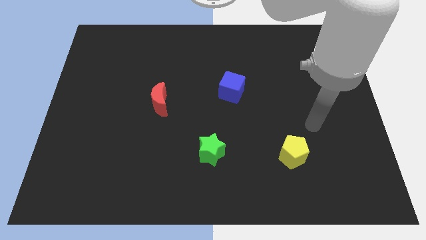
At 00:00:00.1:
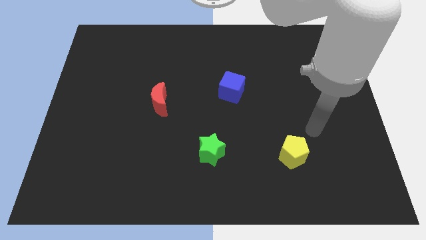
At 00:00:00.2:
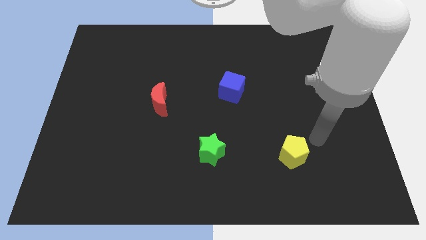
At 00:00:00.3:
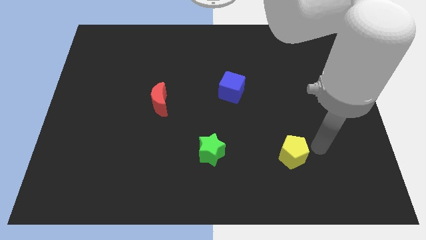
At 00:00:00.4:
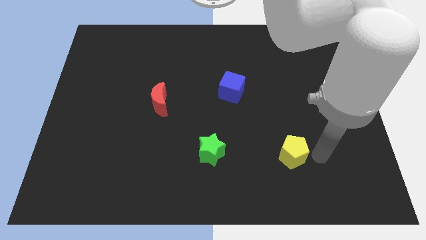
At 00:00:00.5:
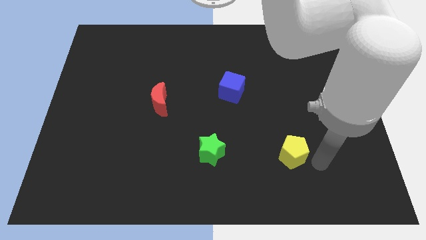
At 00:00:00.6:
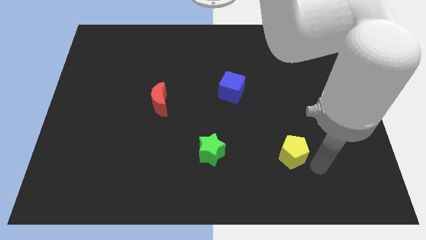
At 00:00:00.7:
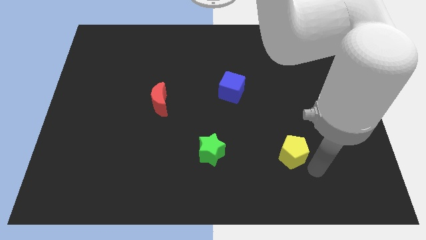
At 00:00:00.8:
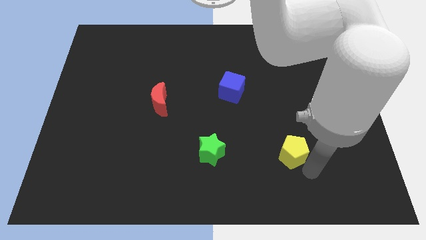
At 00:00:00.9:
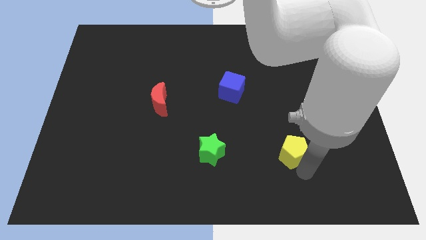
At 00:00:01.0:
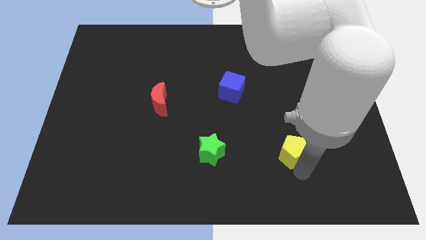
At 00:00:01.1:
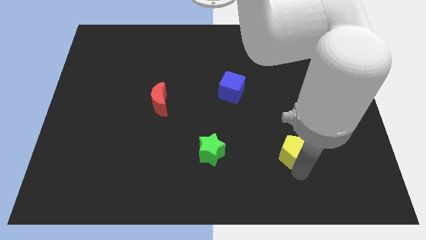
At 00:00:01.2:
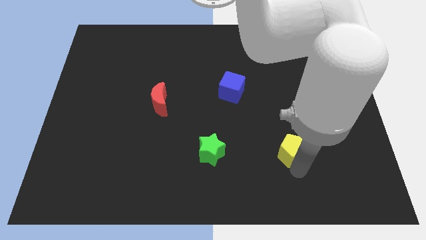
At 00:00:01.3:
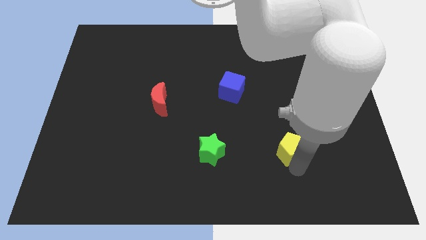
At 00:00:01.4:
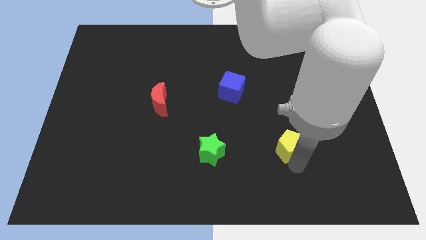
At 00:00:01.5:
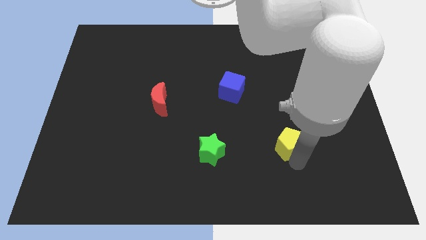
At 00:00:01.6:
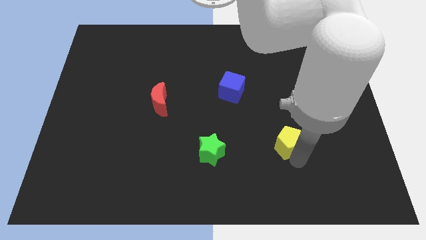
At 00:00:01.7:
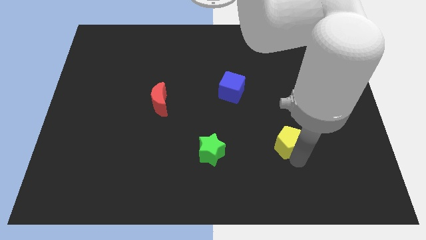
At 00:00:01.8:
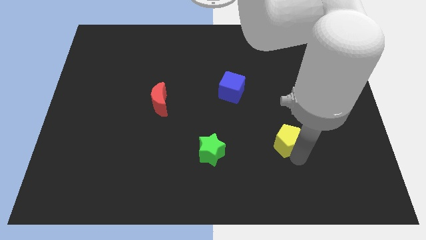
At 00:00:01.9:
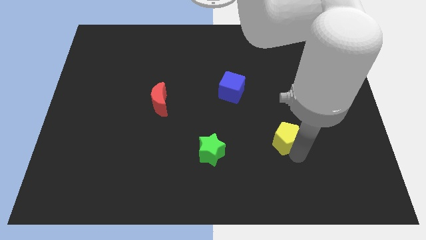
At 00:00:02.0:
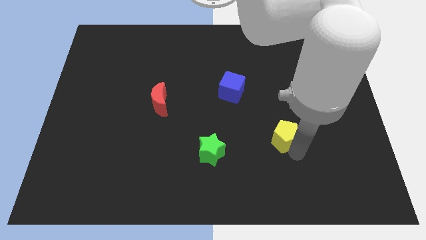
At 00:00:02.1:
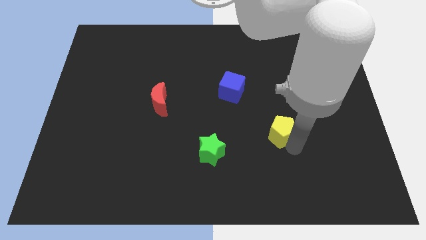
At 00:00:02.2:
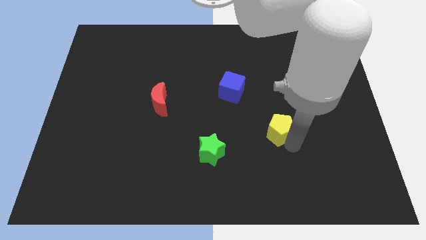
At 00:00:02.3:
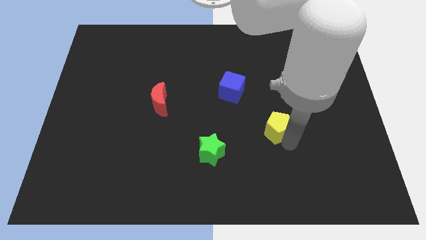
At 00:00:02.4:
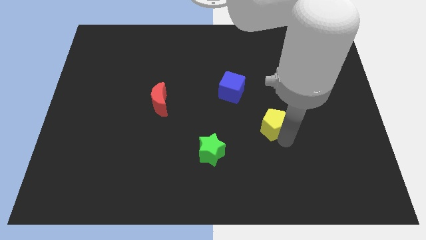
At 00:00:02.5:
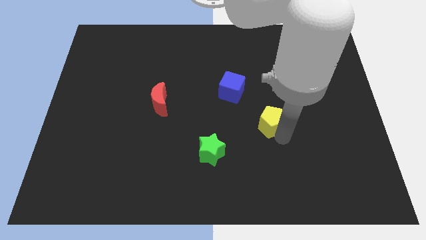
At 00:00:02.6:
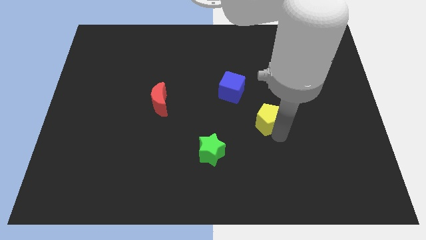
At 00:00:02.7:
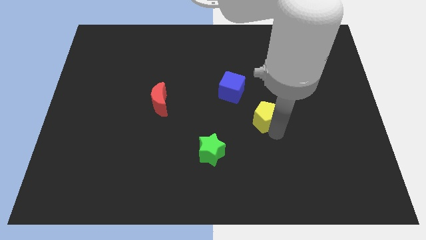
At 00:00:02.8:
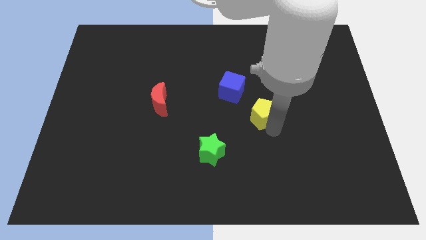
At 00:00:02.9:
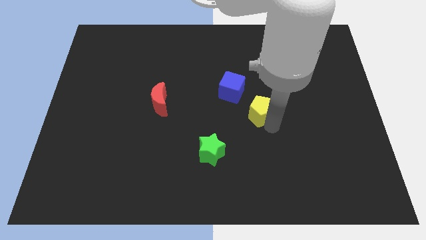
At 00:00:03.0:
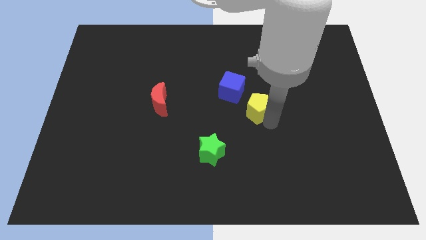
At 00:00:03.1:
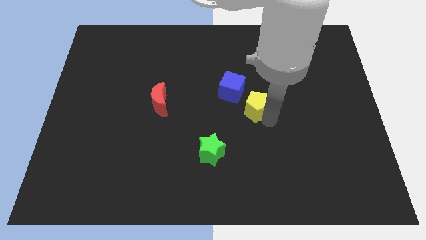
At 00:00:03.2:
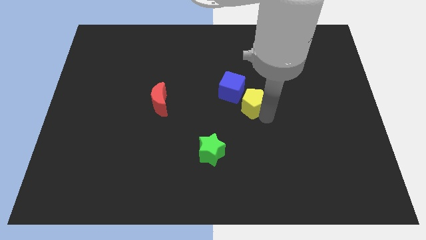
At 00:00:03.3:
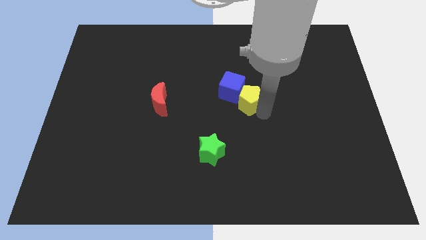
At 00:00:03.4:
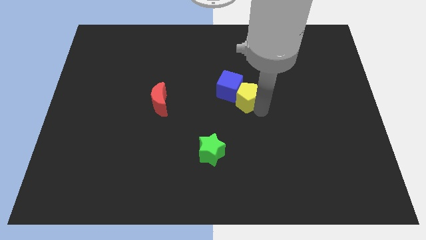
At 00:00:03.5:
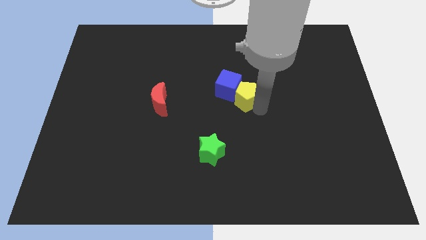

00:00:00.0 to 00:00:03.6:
move the yellow block next to the blue block

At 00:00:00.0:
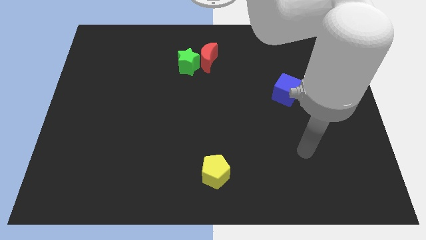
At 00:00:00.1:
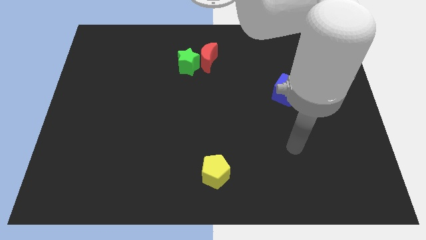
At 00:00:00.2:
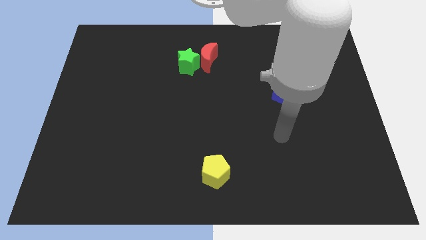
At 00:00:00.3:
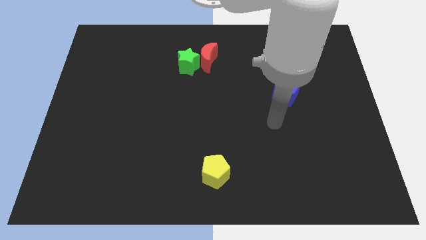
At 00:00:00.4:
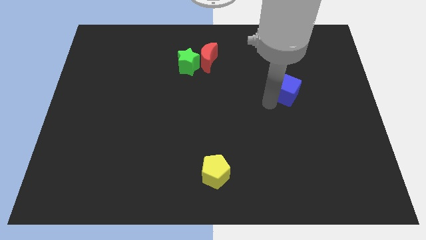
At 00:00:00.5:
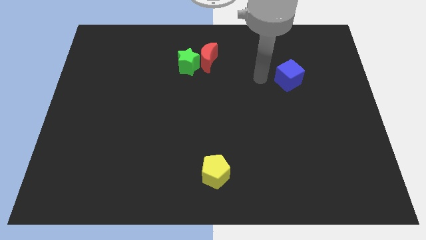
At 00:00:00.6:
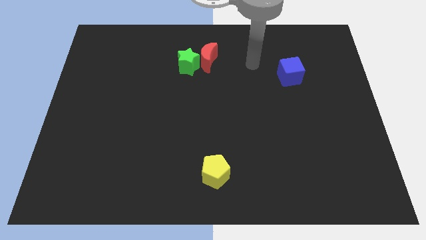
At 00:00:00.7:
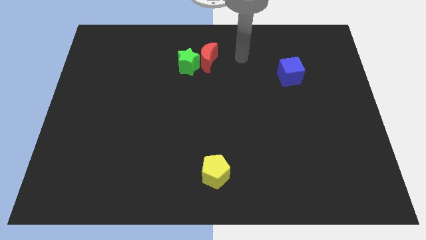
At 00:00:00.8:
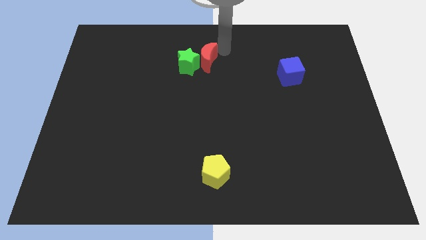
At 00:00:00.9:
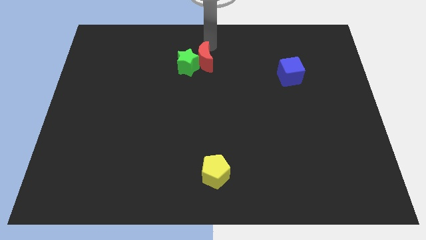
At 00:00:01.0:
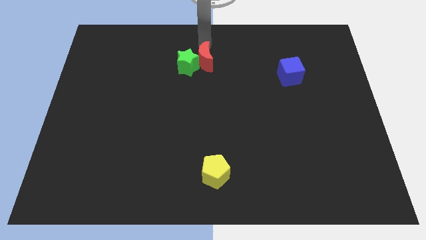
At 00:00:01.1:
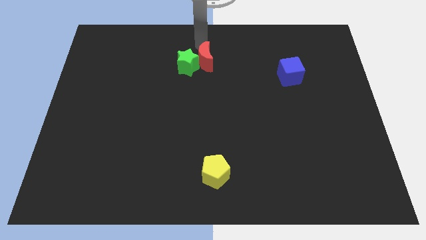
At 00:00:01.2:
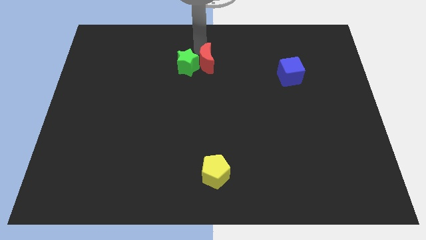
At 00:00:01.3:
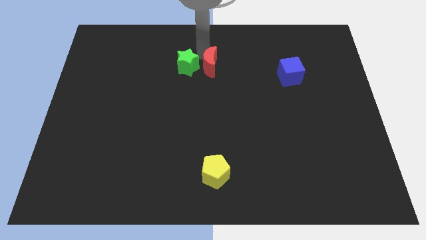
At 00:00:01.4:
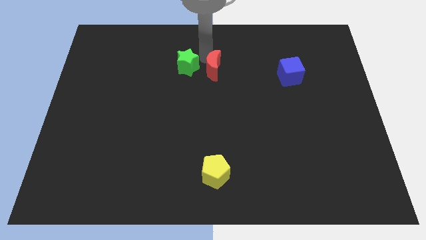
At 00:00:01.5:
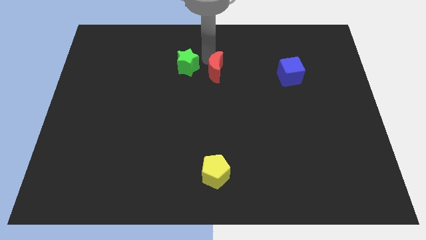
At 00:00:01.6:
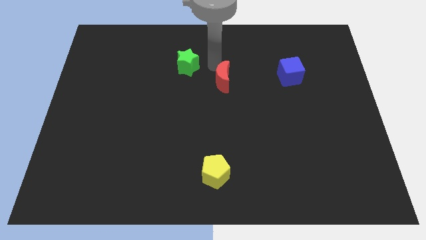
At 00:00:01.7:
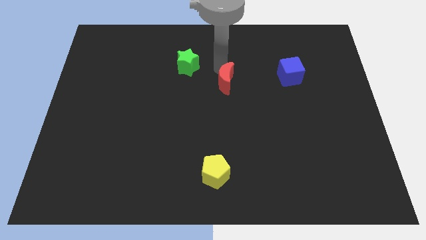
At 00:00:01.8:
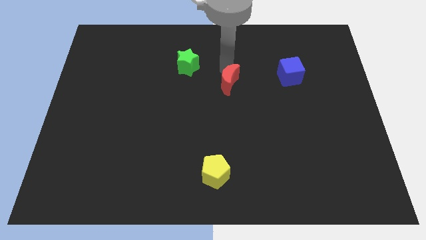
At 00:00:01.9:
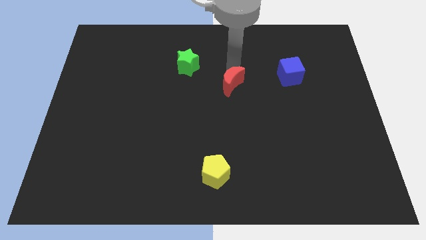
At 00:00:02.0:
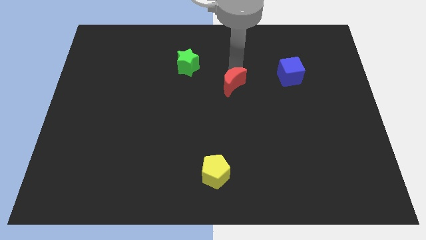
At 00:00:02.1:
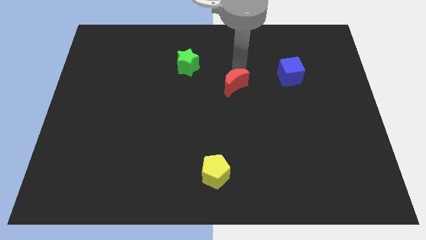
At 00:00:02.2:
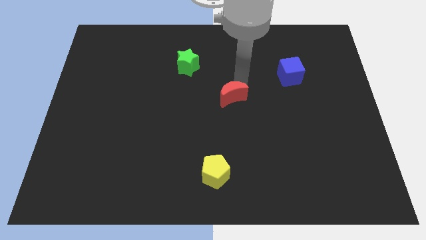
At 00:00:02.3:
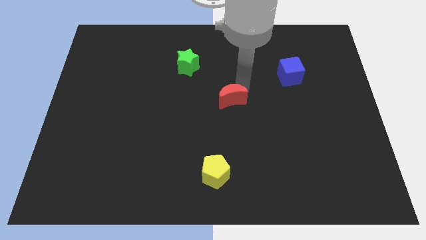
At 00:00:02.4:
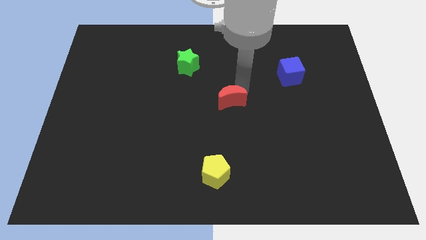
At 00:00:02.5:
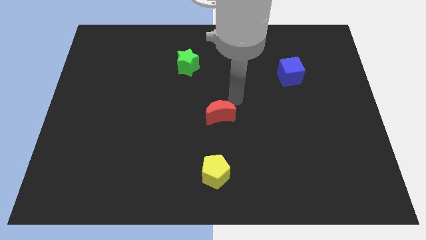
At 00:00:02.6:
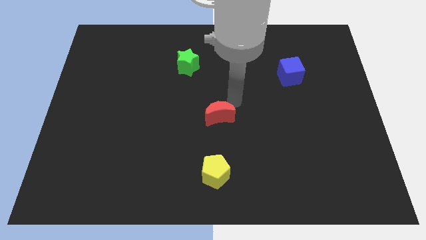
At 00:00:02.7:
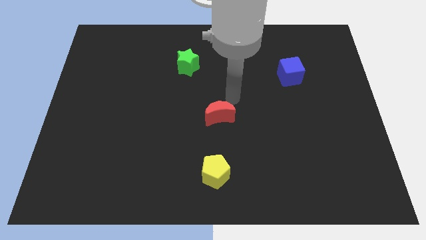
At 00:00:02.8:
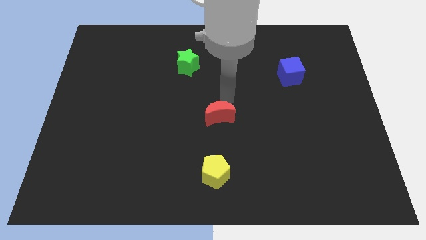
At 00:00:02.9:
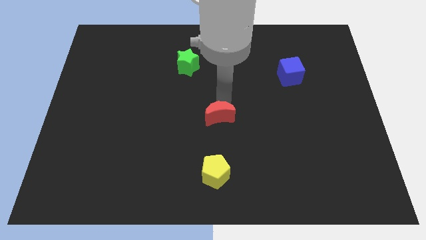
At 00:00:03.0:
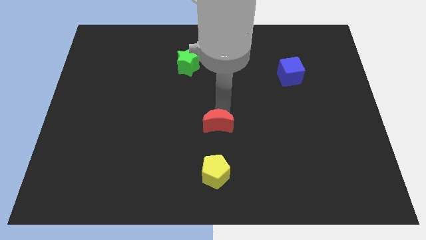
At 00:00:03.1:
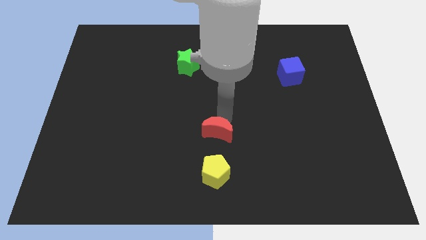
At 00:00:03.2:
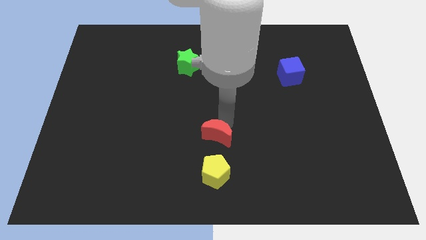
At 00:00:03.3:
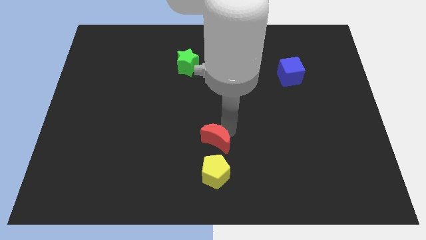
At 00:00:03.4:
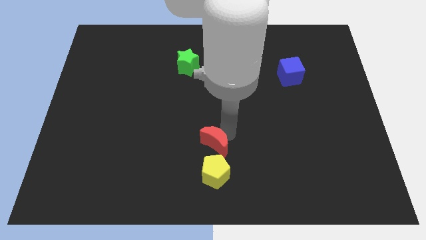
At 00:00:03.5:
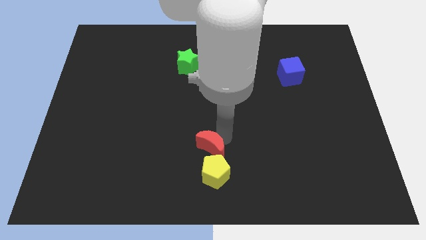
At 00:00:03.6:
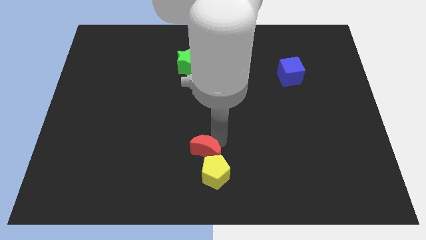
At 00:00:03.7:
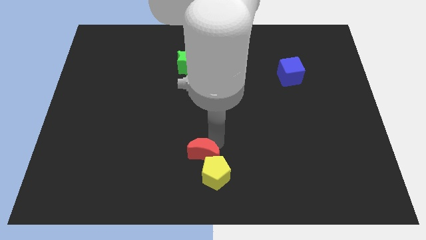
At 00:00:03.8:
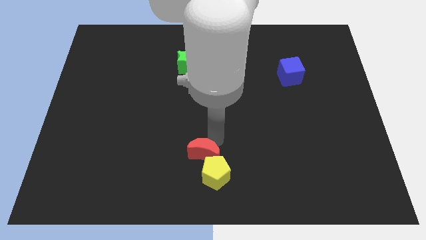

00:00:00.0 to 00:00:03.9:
push the moon to the yellow pentagon

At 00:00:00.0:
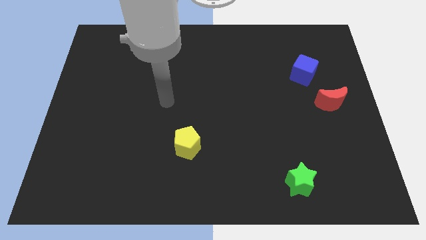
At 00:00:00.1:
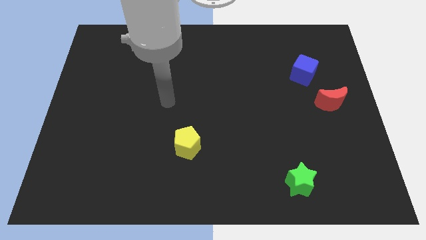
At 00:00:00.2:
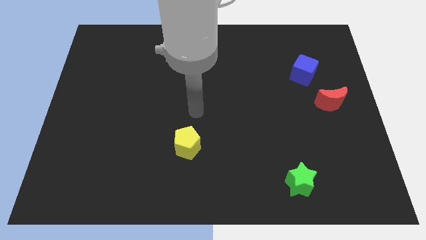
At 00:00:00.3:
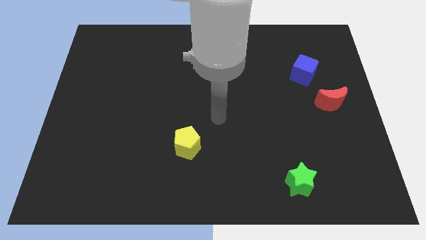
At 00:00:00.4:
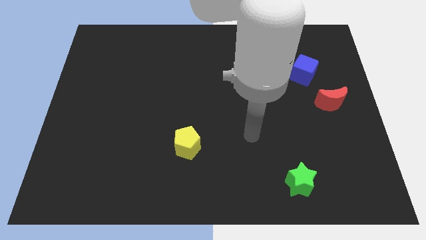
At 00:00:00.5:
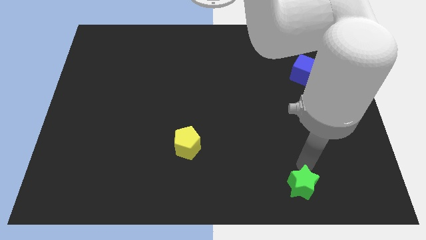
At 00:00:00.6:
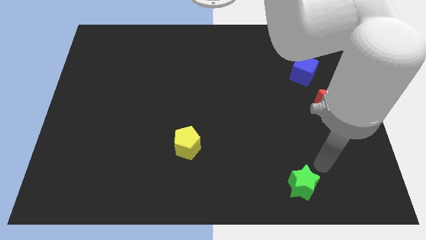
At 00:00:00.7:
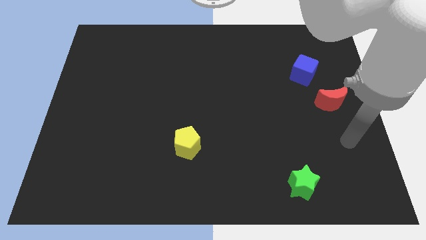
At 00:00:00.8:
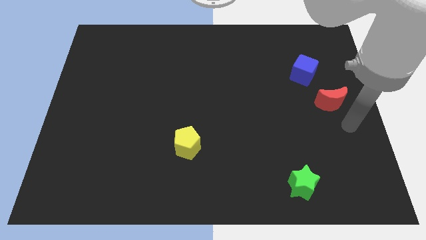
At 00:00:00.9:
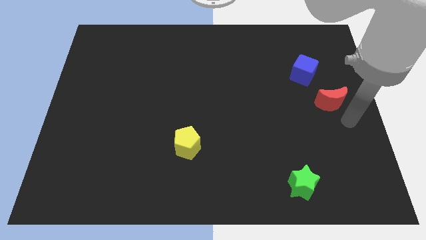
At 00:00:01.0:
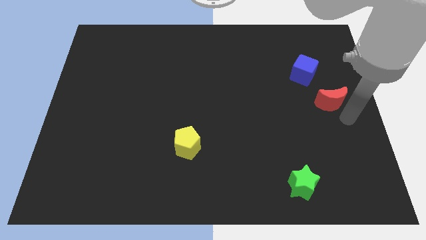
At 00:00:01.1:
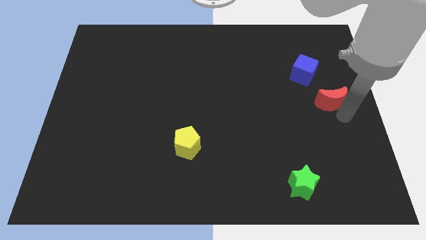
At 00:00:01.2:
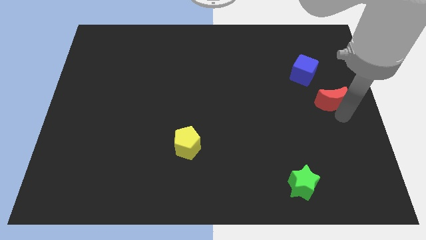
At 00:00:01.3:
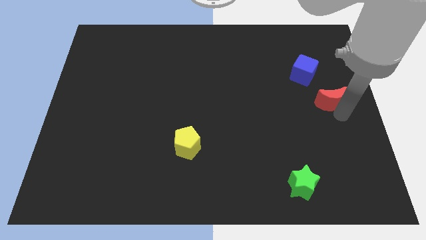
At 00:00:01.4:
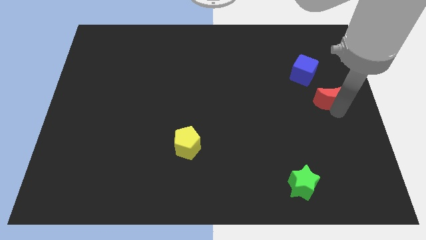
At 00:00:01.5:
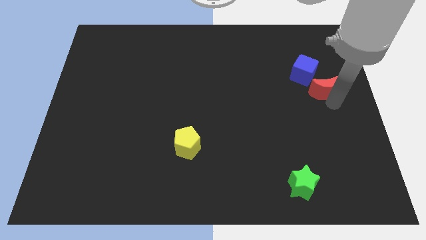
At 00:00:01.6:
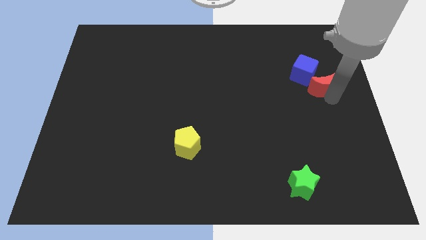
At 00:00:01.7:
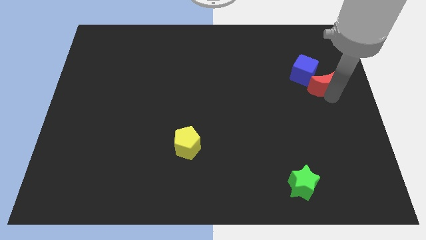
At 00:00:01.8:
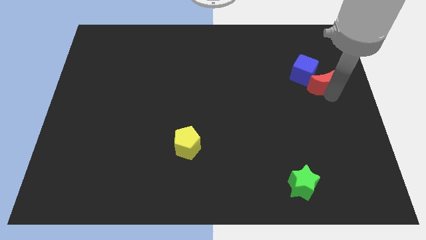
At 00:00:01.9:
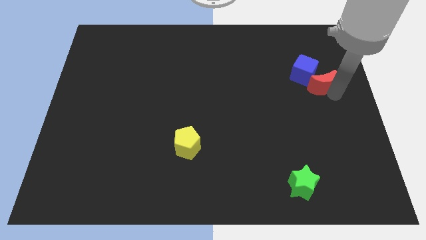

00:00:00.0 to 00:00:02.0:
slide the moon to the blue block
